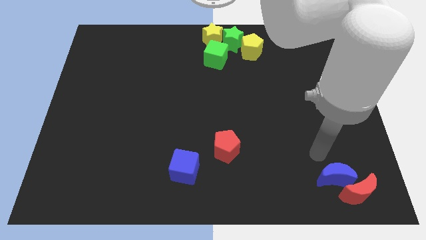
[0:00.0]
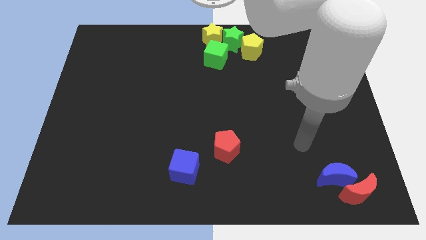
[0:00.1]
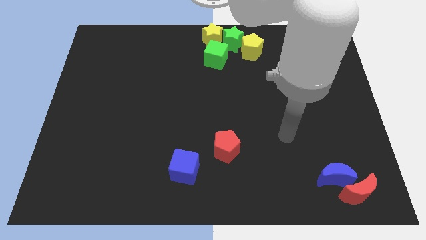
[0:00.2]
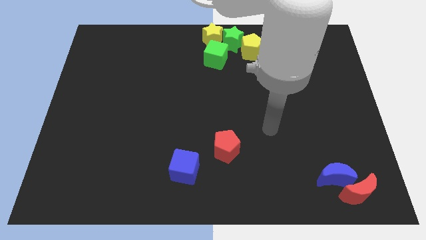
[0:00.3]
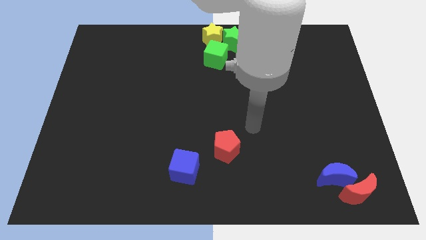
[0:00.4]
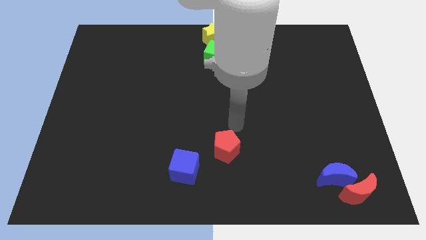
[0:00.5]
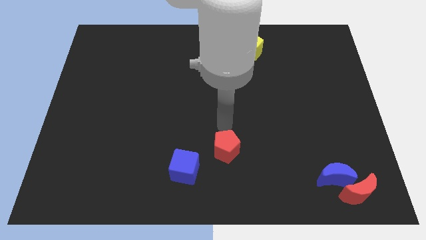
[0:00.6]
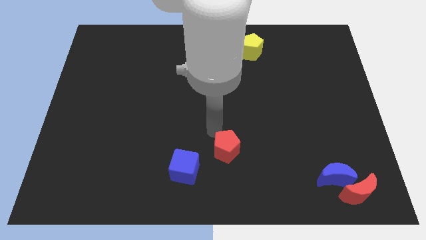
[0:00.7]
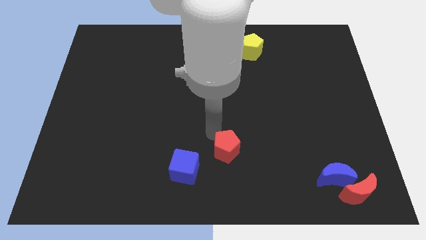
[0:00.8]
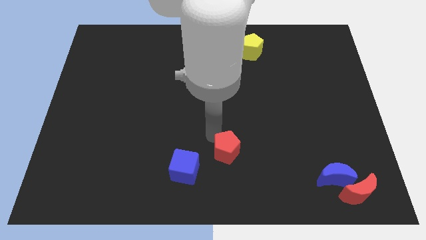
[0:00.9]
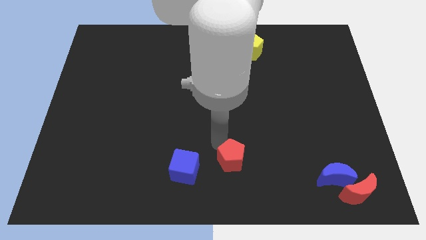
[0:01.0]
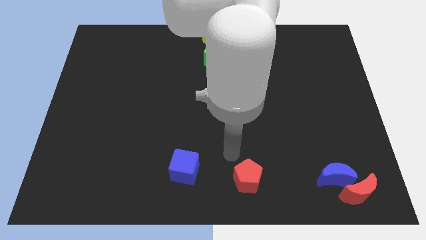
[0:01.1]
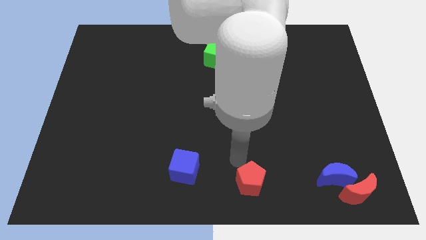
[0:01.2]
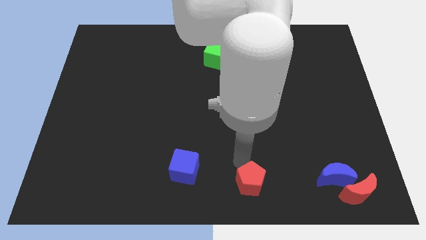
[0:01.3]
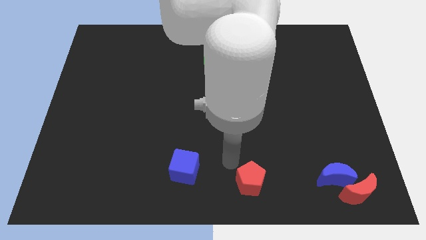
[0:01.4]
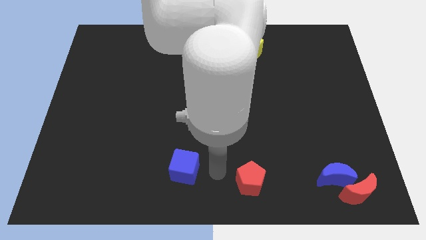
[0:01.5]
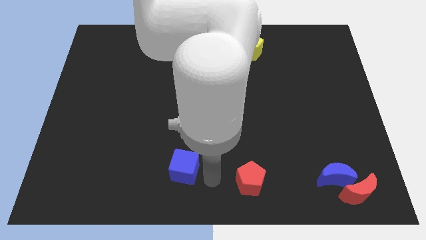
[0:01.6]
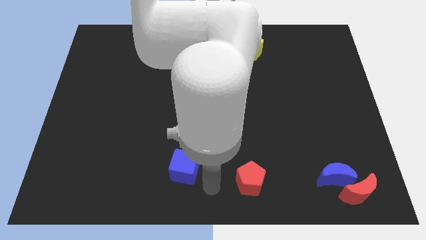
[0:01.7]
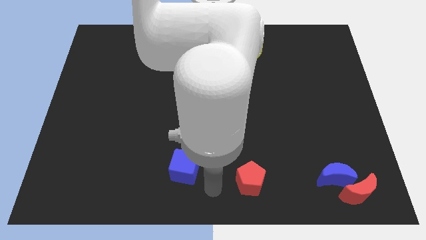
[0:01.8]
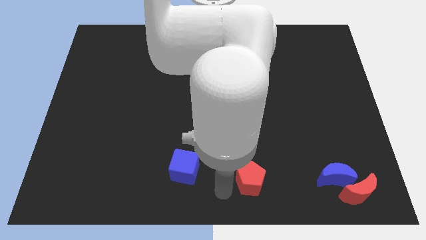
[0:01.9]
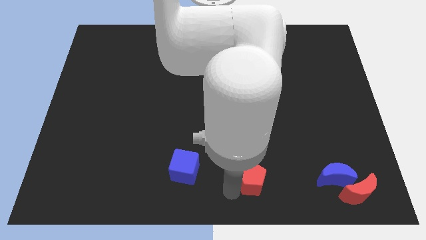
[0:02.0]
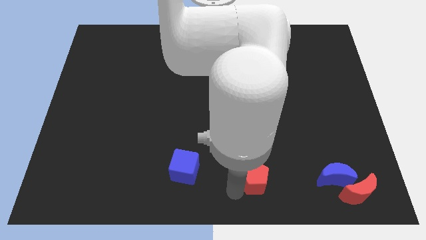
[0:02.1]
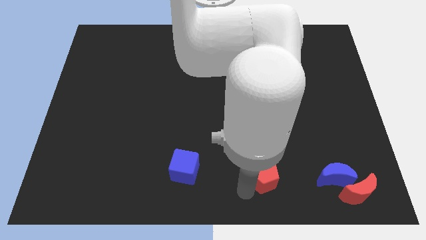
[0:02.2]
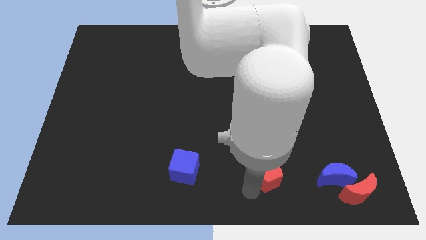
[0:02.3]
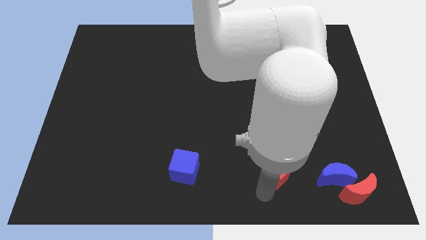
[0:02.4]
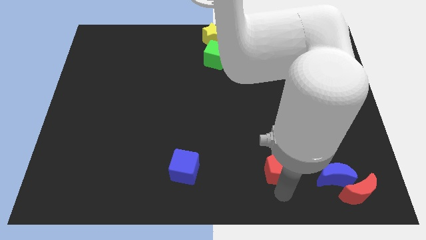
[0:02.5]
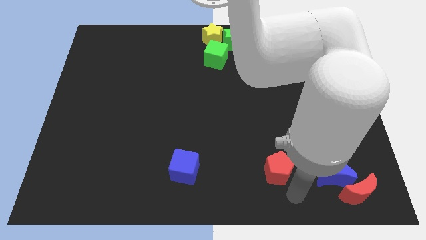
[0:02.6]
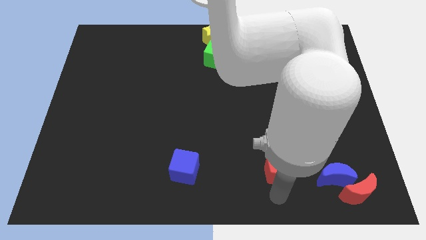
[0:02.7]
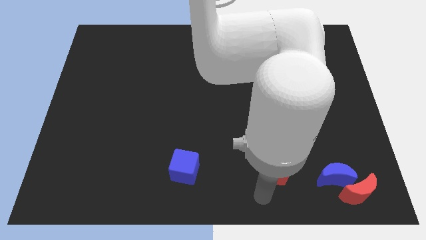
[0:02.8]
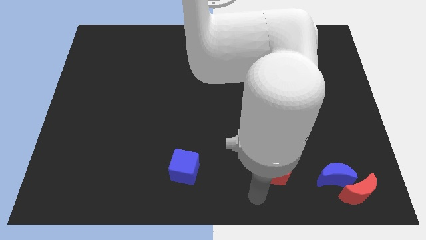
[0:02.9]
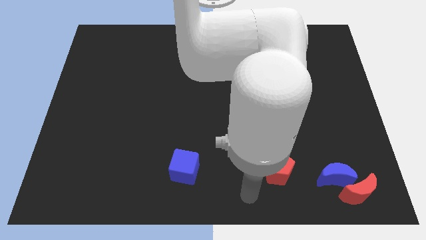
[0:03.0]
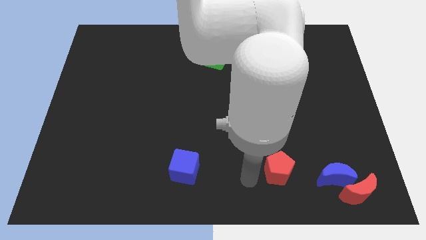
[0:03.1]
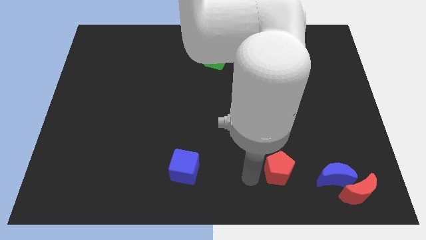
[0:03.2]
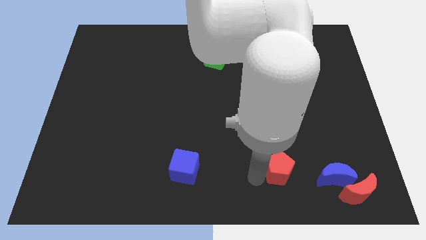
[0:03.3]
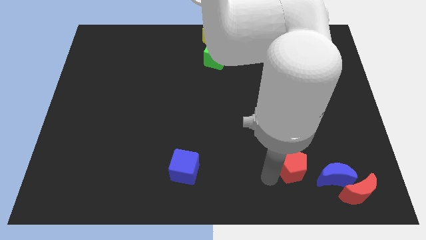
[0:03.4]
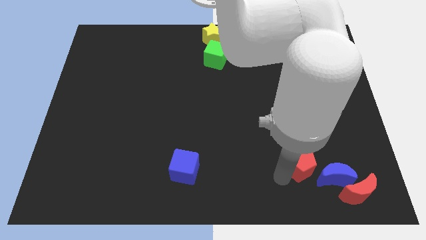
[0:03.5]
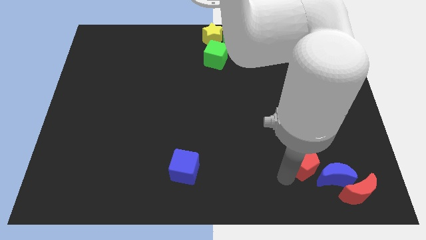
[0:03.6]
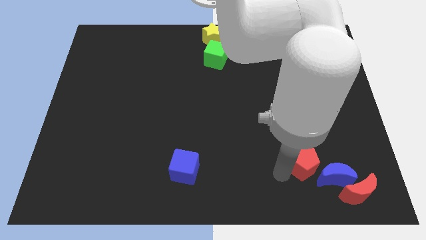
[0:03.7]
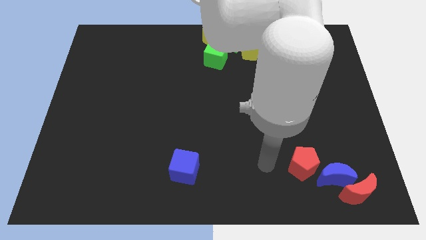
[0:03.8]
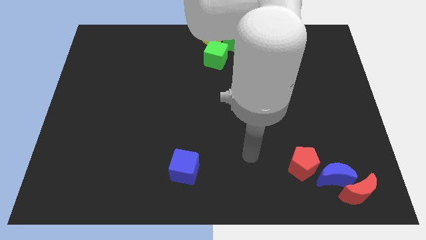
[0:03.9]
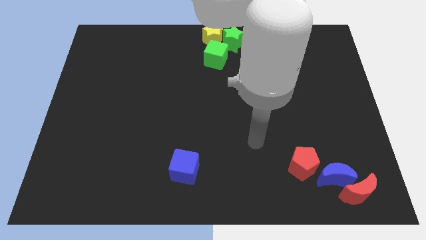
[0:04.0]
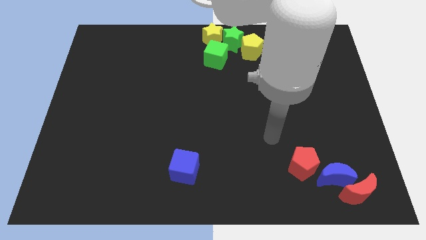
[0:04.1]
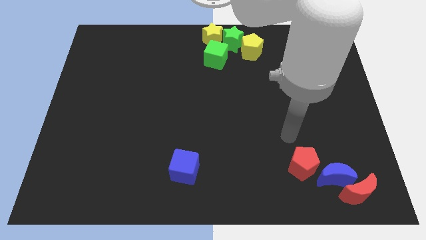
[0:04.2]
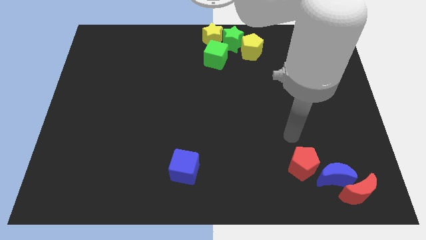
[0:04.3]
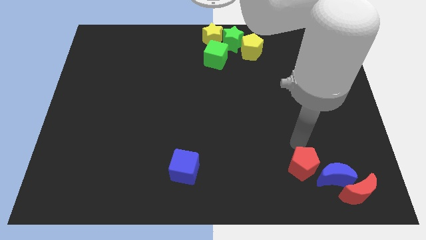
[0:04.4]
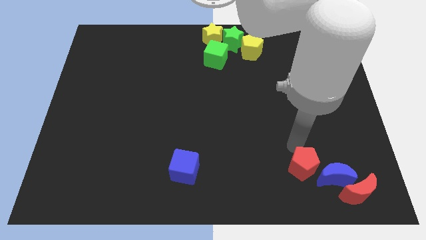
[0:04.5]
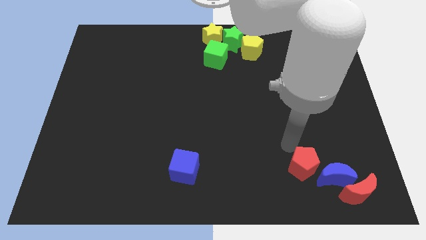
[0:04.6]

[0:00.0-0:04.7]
move the red pentagon towards the blue cube

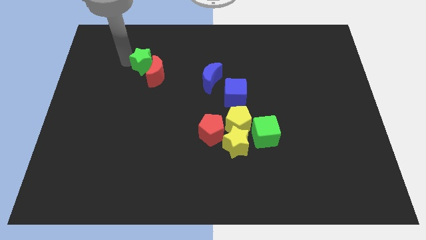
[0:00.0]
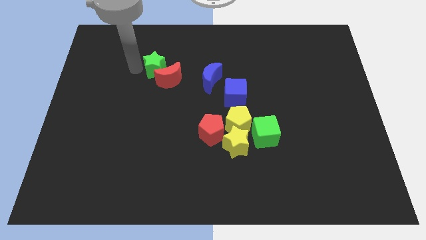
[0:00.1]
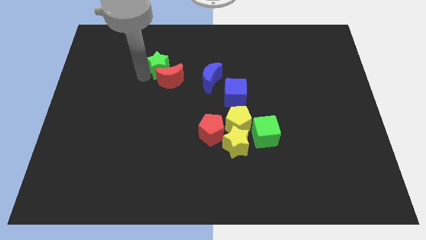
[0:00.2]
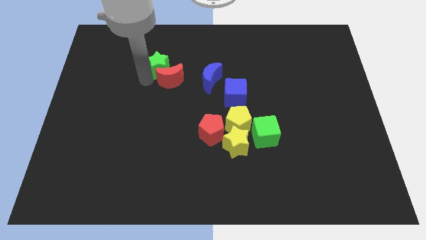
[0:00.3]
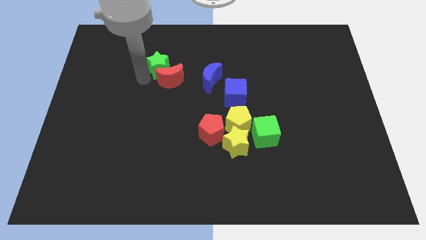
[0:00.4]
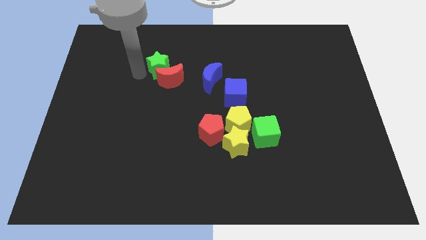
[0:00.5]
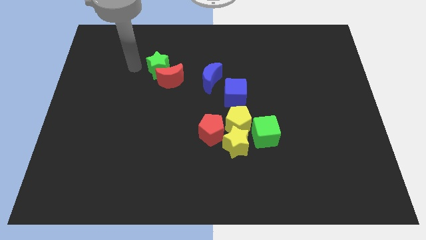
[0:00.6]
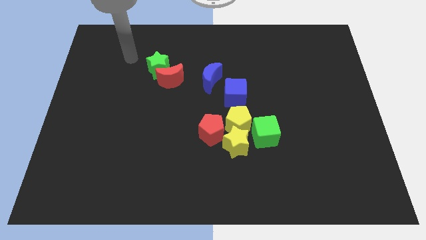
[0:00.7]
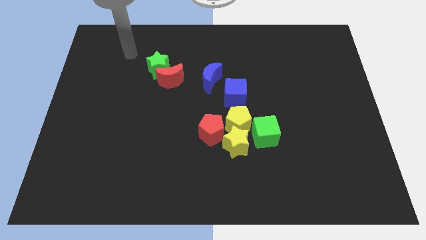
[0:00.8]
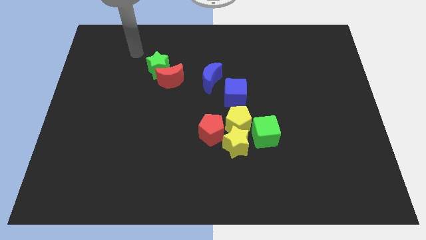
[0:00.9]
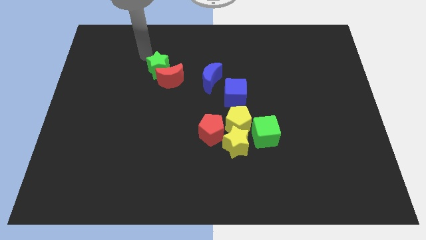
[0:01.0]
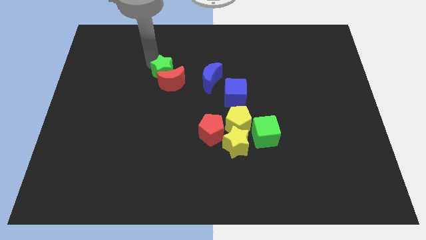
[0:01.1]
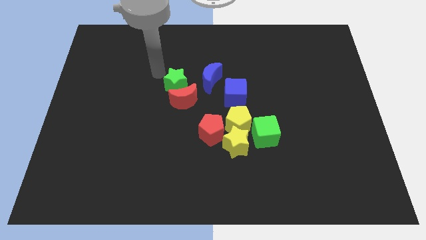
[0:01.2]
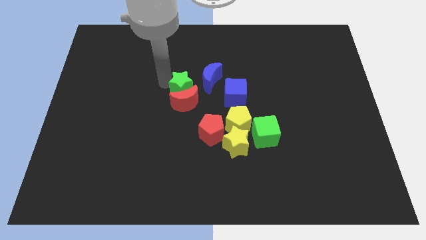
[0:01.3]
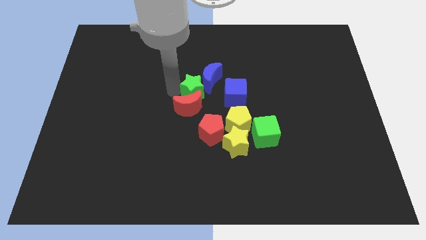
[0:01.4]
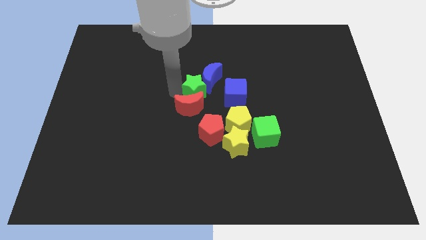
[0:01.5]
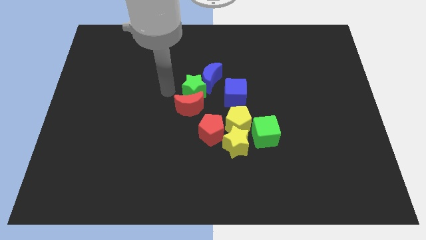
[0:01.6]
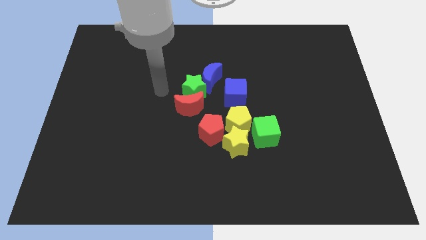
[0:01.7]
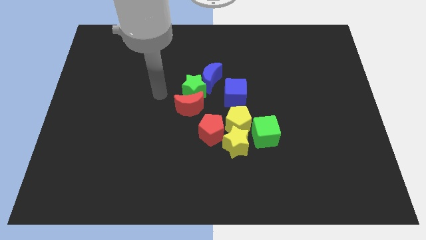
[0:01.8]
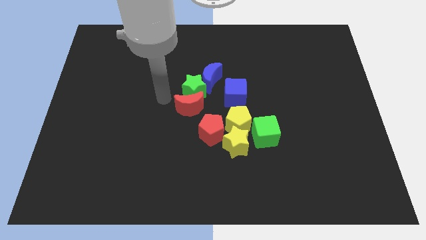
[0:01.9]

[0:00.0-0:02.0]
move the green star and the red moon towards the center of the board

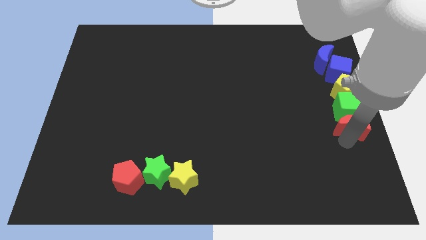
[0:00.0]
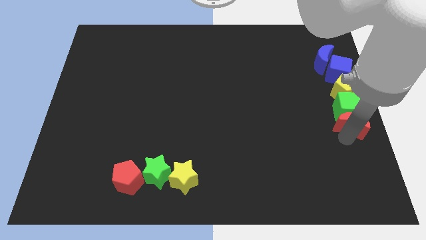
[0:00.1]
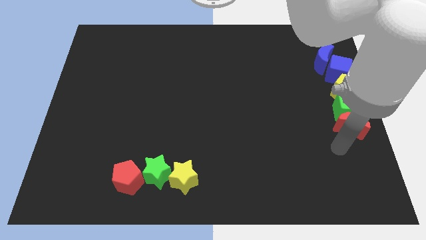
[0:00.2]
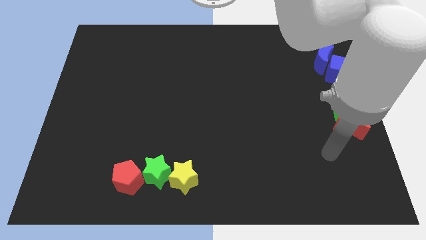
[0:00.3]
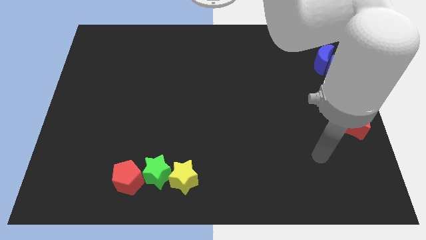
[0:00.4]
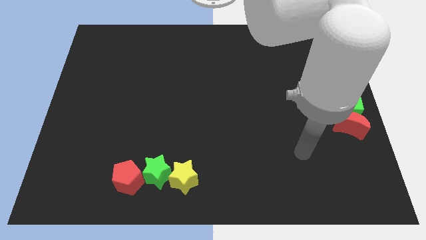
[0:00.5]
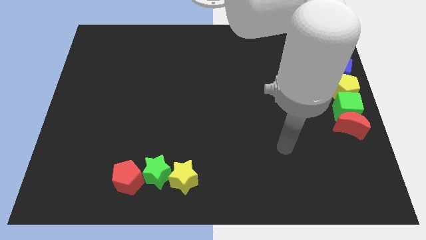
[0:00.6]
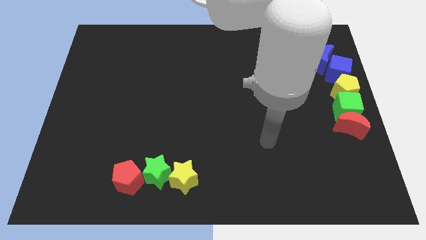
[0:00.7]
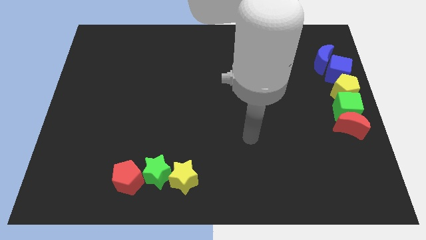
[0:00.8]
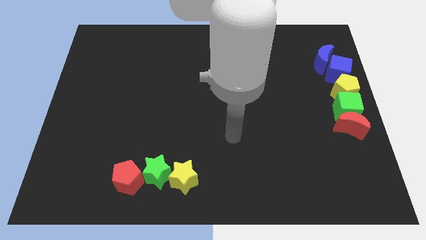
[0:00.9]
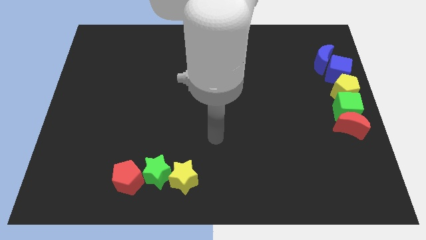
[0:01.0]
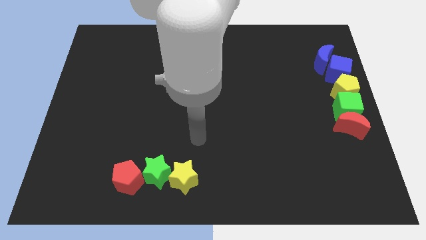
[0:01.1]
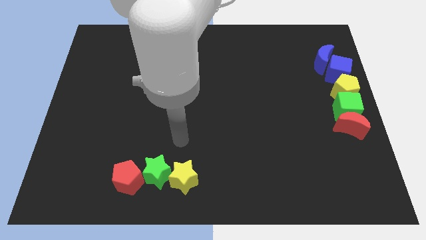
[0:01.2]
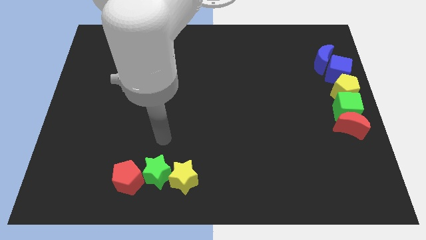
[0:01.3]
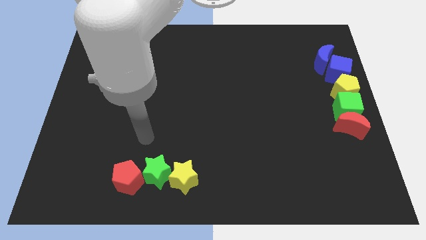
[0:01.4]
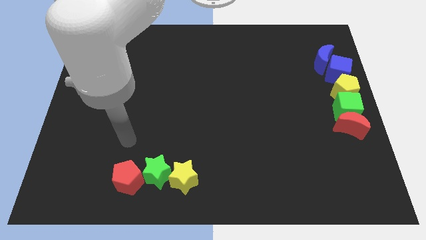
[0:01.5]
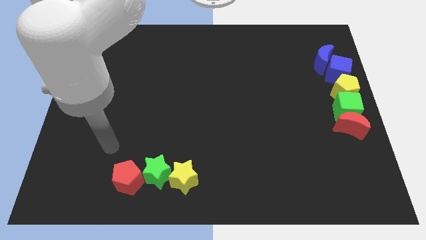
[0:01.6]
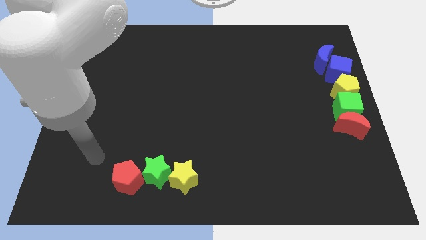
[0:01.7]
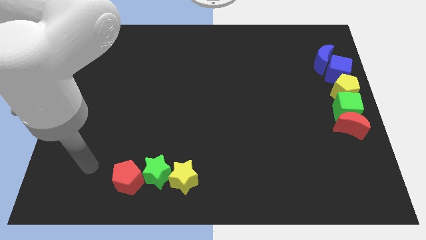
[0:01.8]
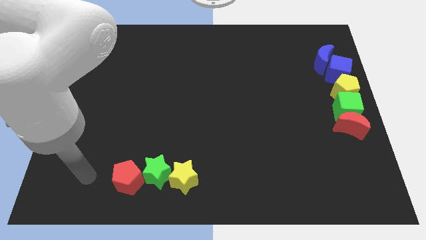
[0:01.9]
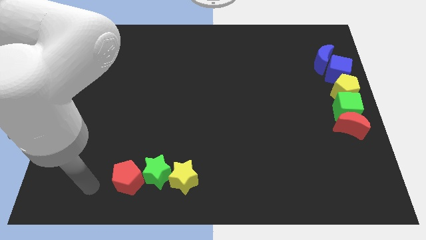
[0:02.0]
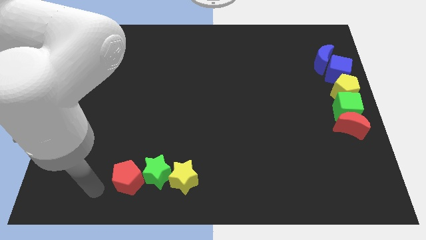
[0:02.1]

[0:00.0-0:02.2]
move your arm away from the red moon
